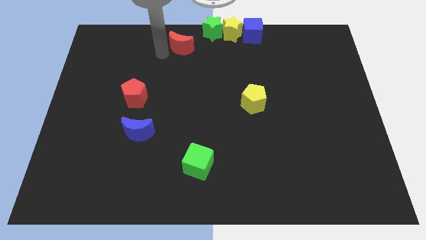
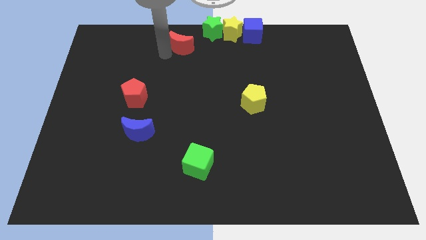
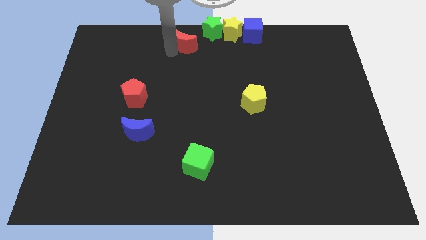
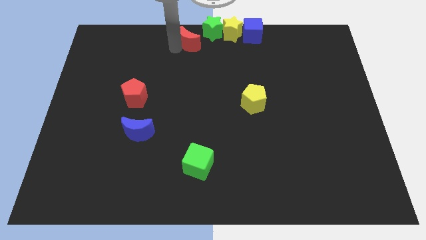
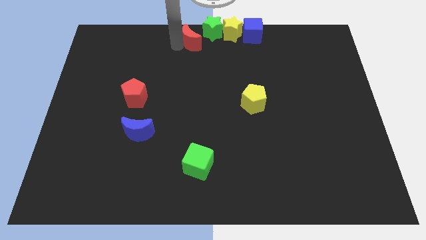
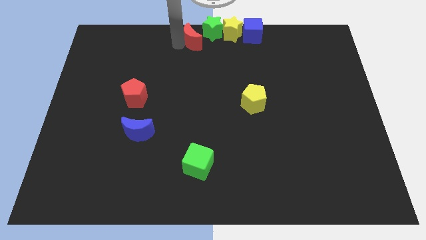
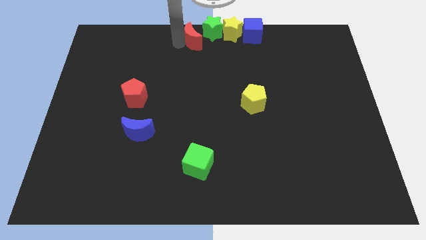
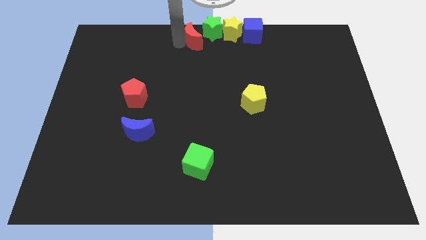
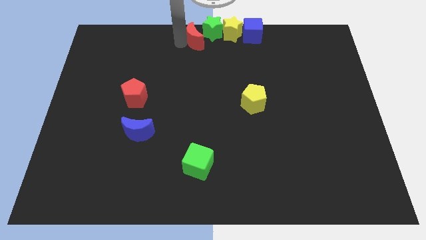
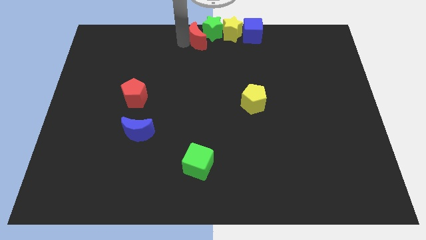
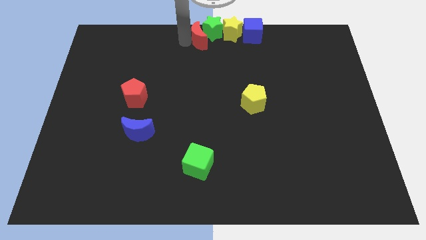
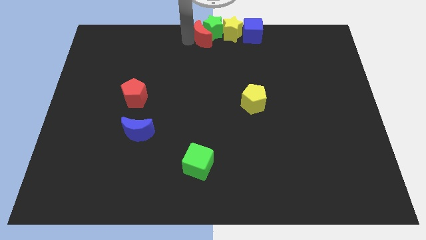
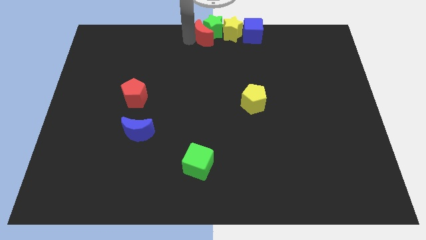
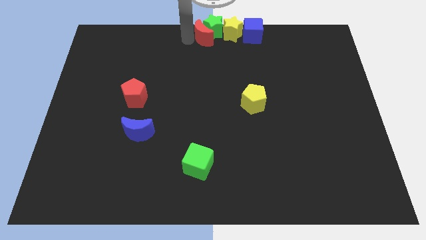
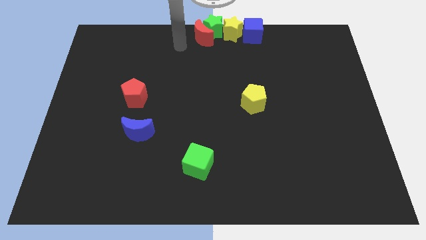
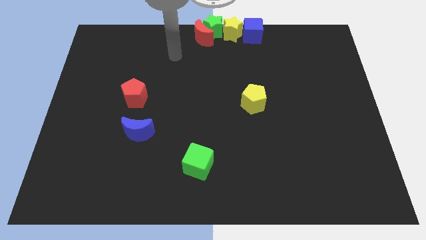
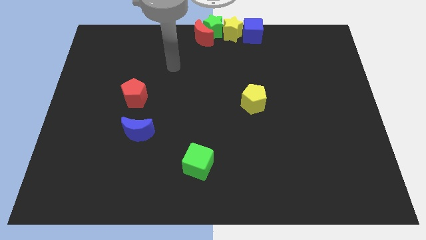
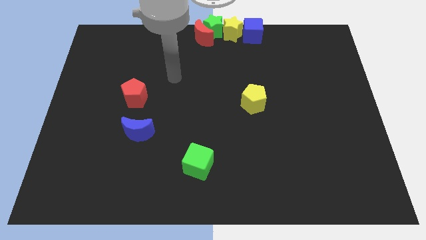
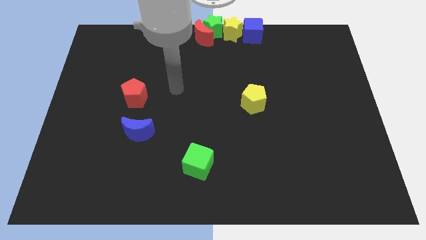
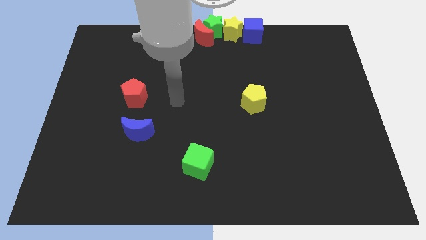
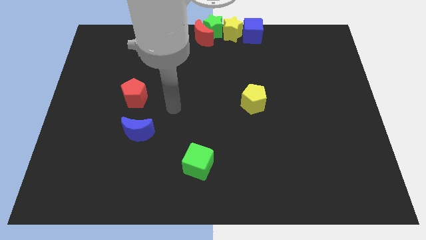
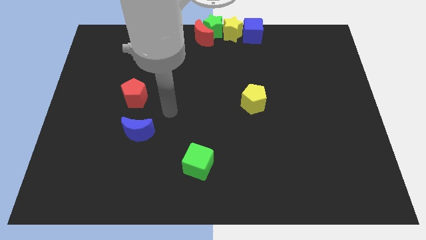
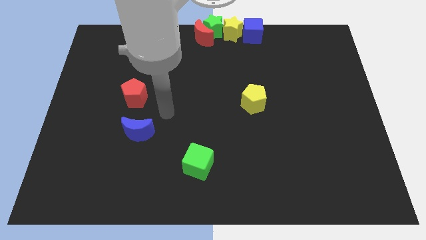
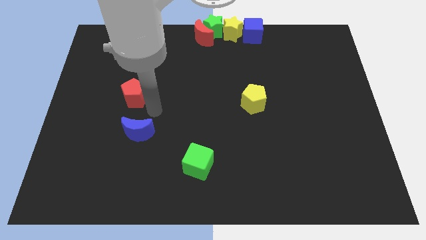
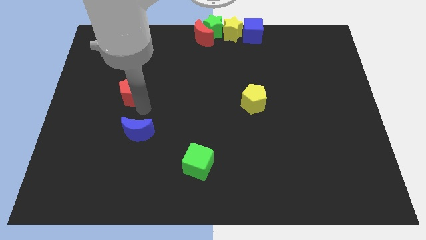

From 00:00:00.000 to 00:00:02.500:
move the red moon left to the green star

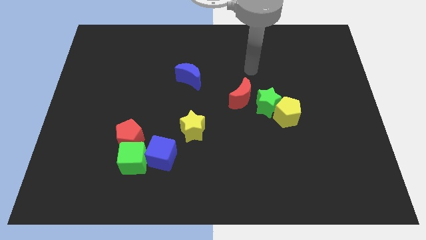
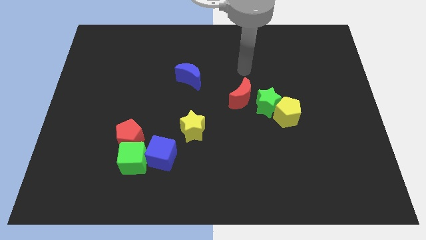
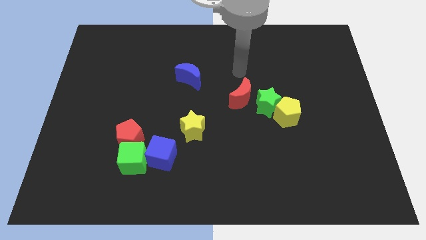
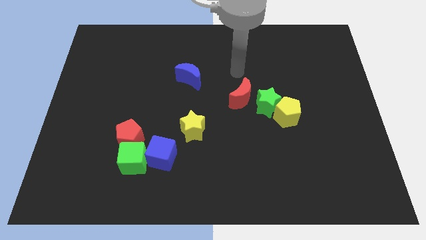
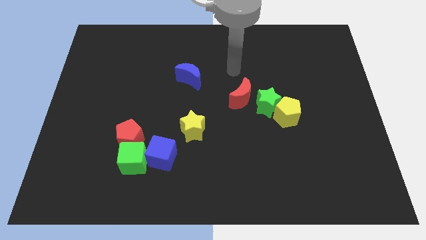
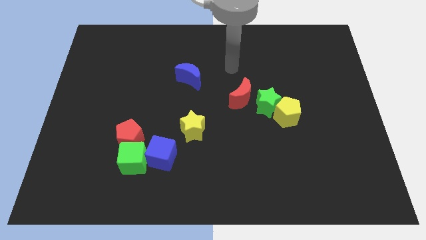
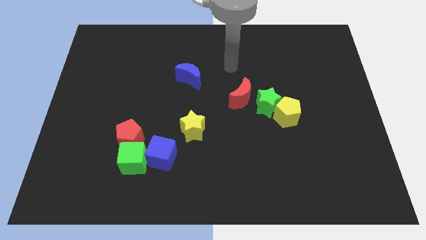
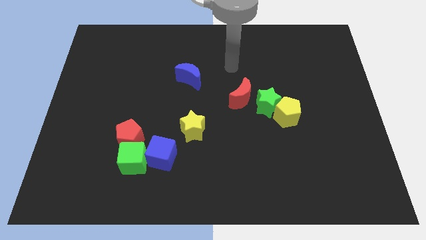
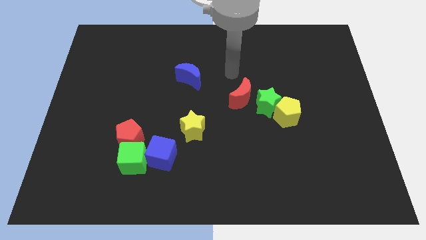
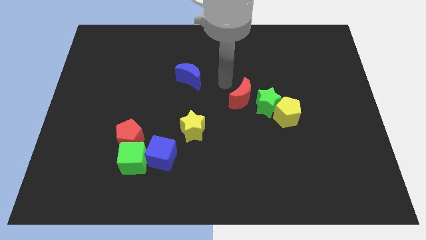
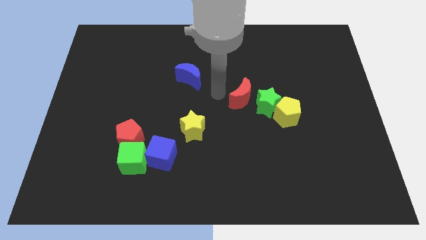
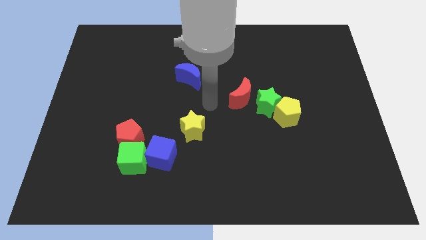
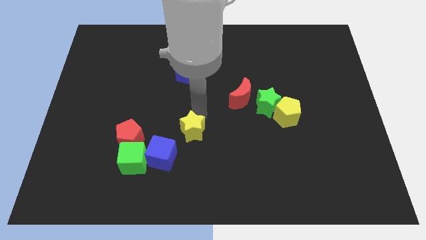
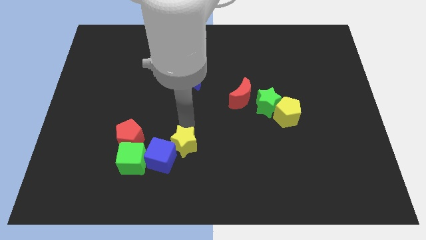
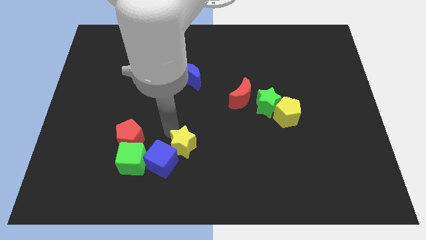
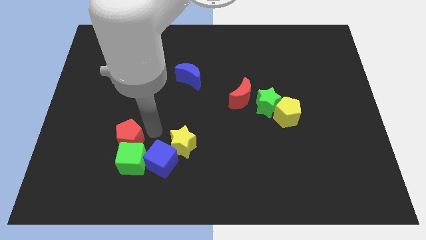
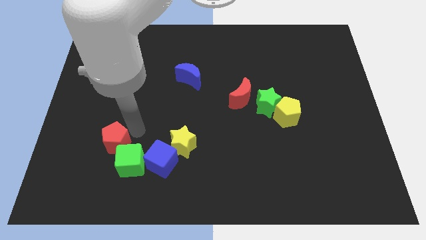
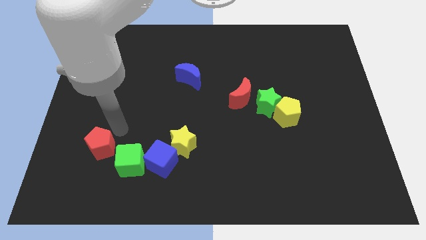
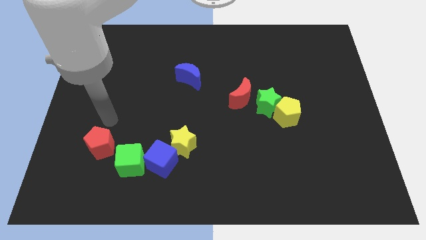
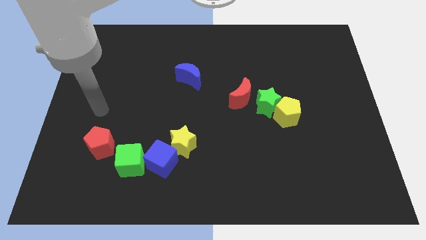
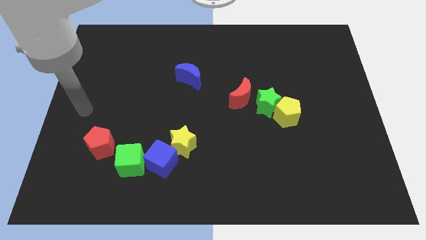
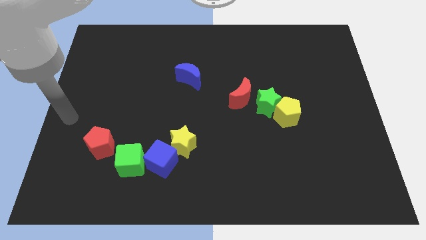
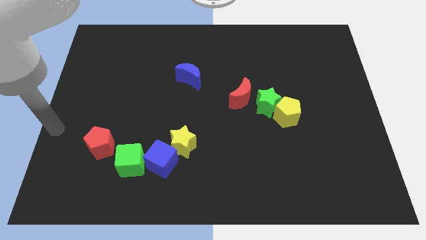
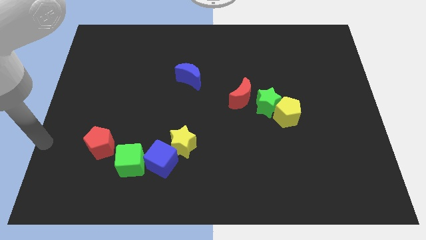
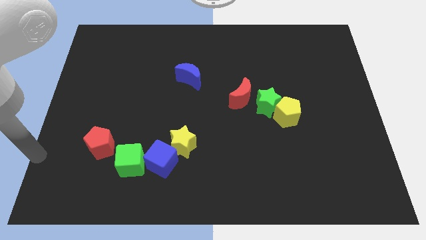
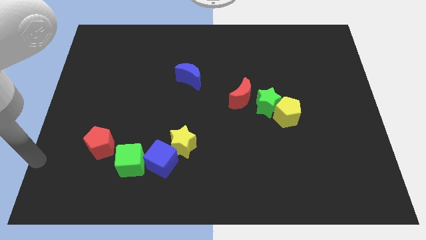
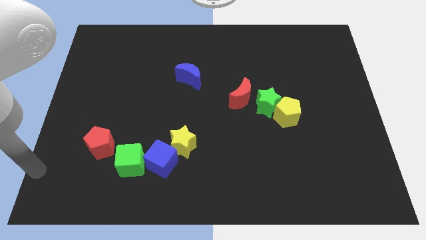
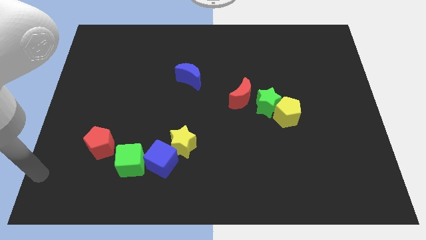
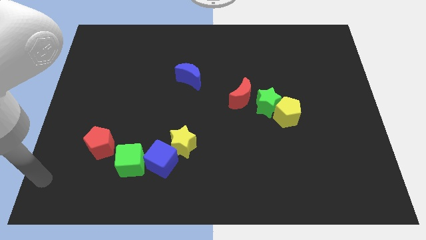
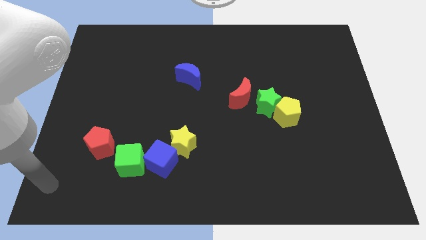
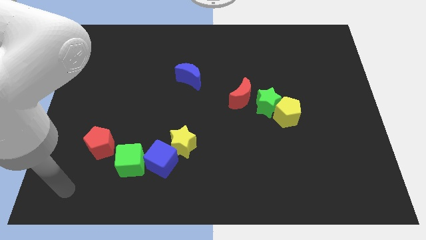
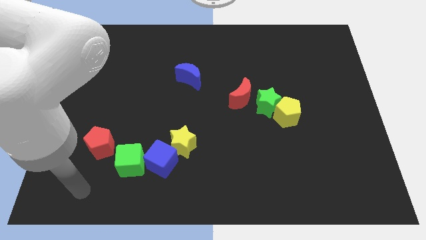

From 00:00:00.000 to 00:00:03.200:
slightly push the group of blocks towards the bottom side of the board

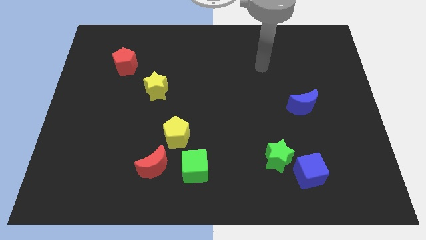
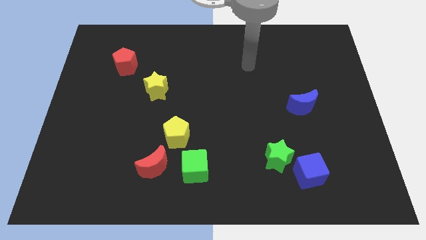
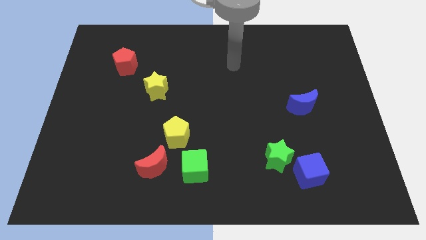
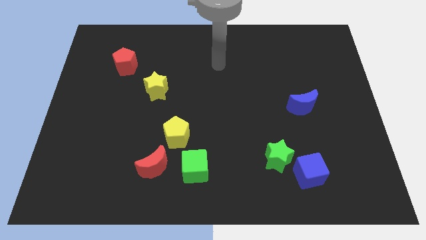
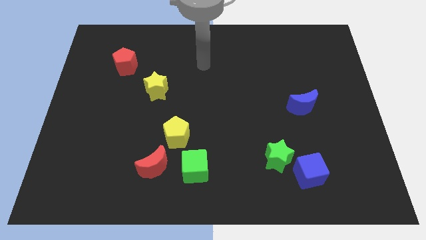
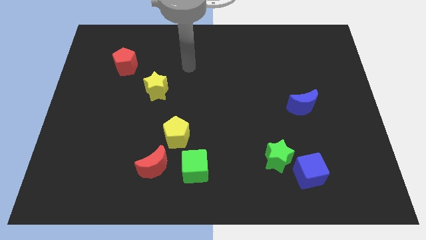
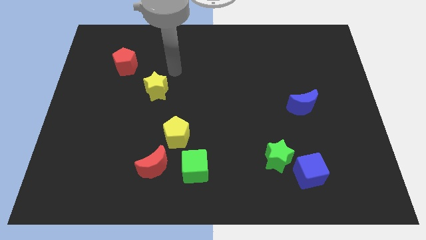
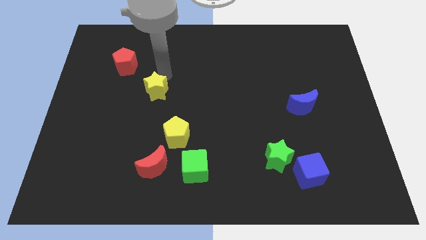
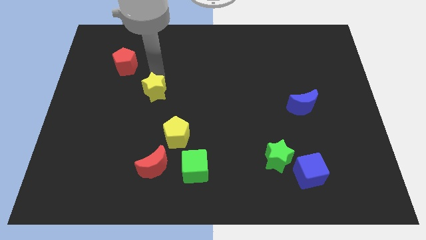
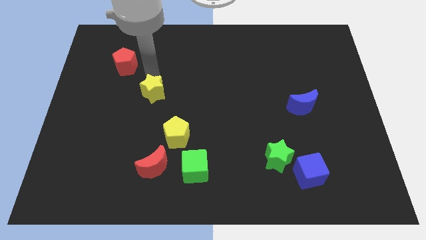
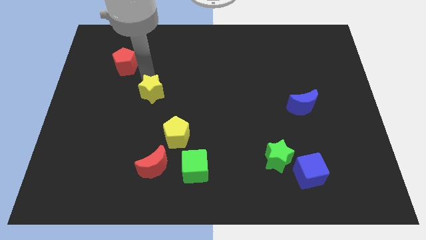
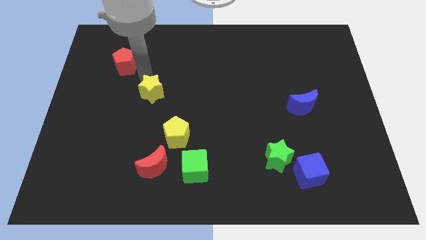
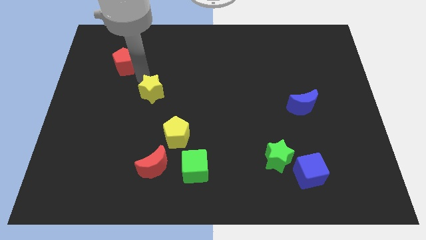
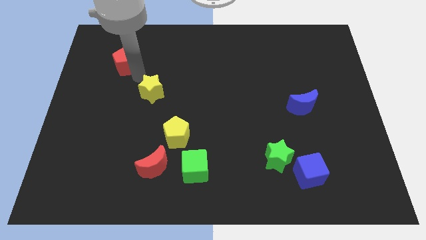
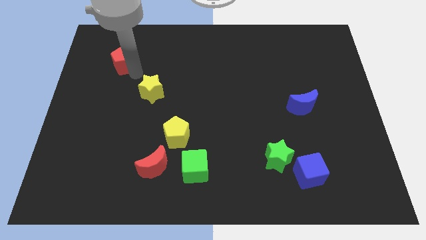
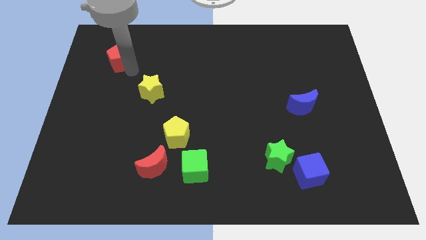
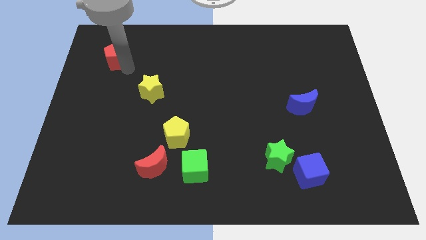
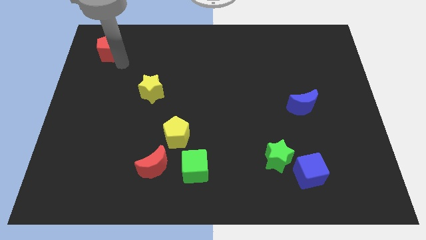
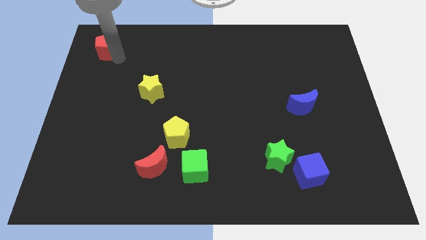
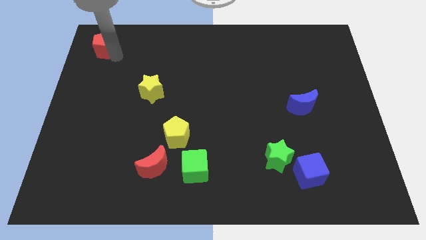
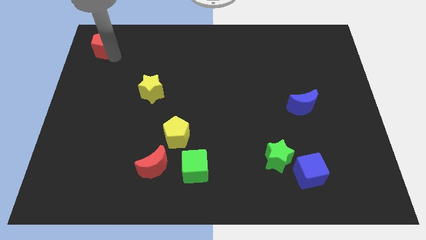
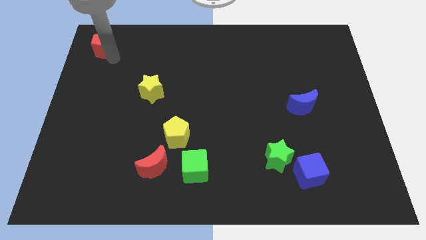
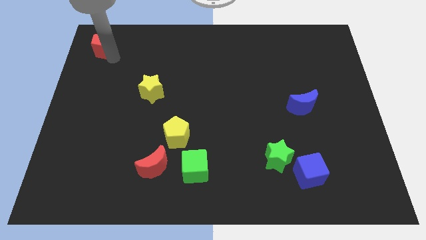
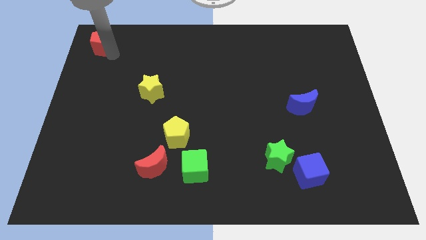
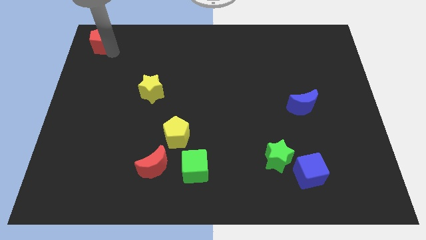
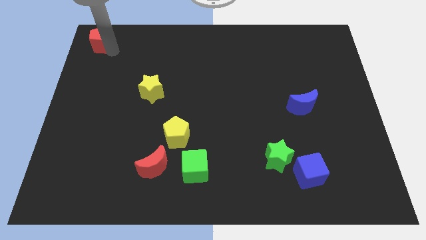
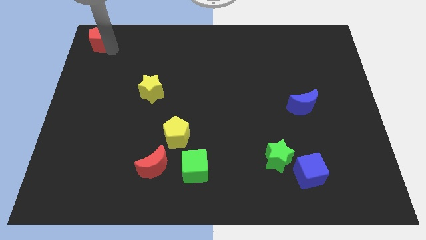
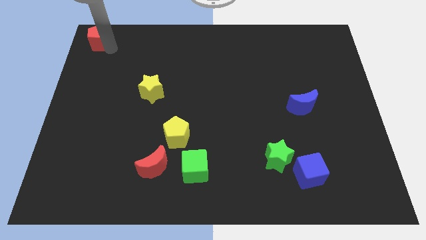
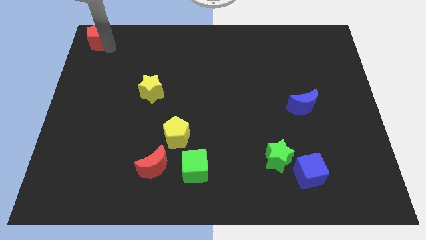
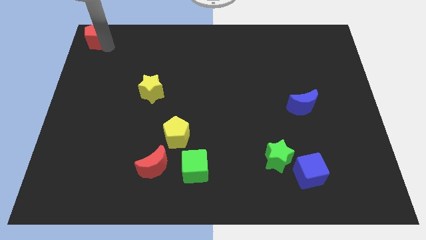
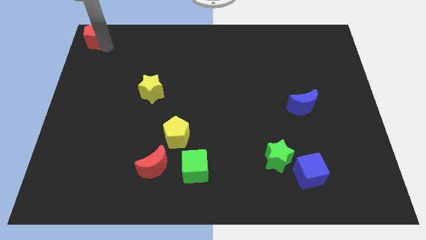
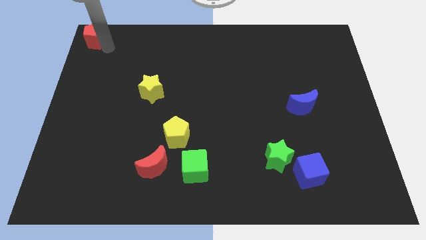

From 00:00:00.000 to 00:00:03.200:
move red pentagon to the top left corner of the board
